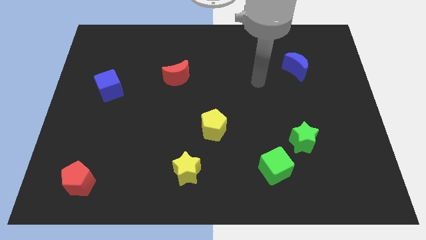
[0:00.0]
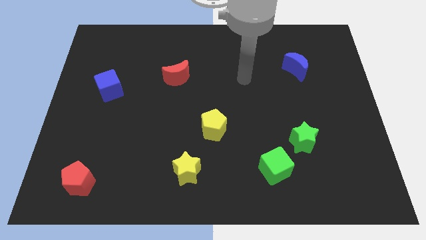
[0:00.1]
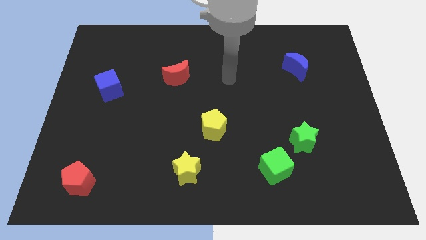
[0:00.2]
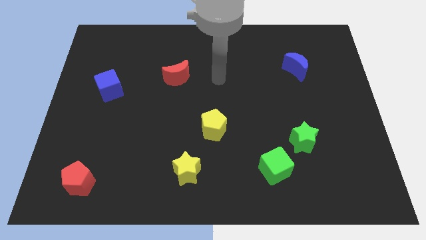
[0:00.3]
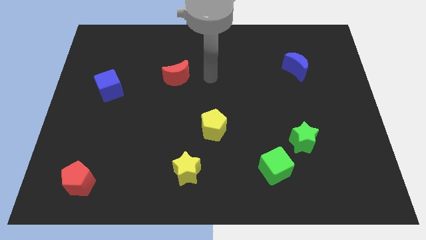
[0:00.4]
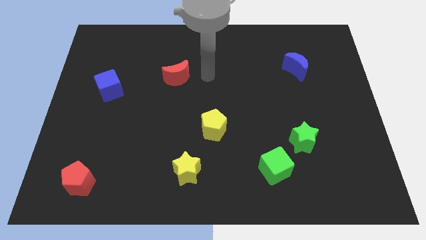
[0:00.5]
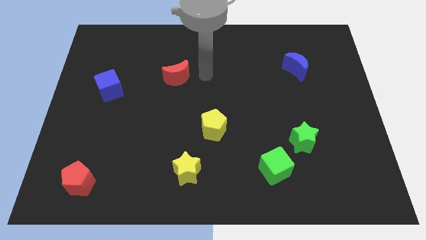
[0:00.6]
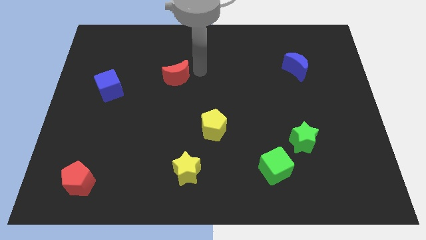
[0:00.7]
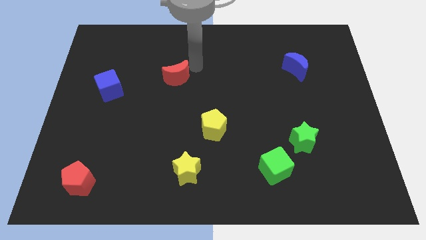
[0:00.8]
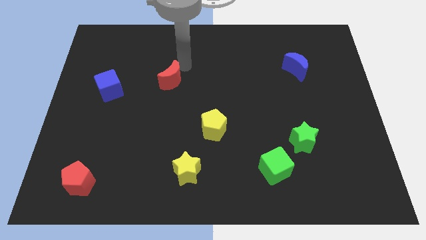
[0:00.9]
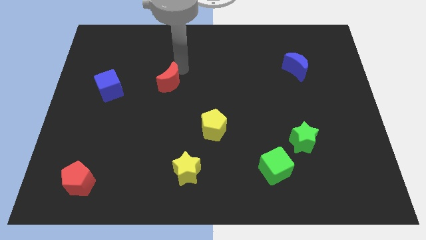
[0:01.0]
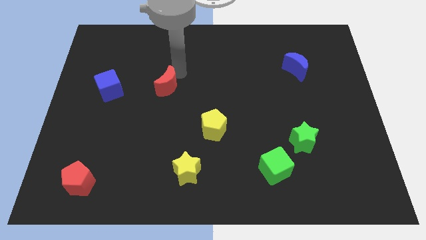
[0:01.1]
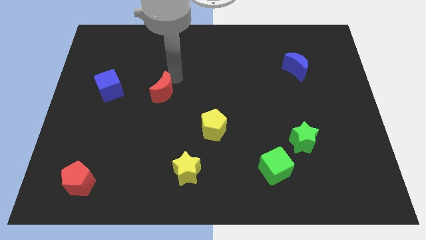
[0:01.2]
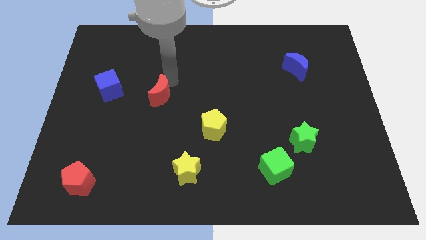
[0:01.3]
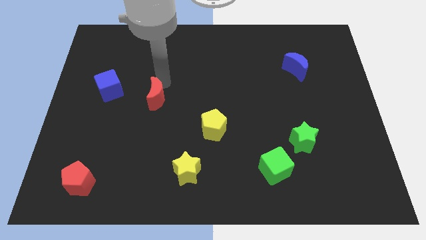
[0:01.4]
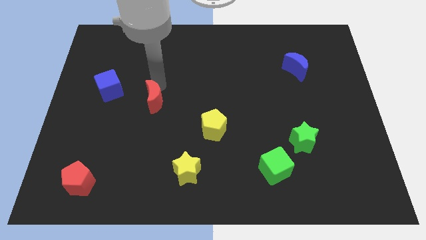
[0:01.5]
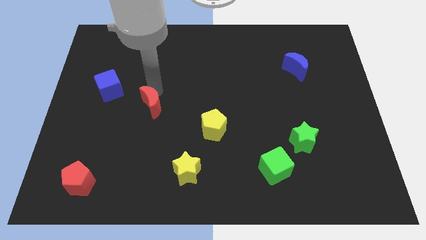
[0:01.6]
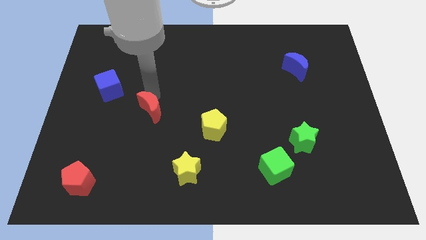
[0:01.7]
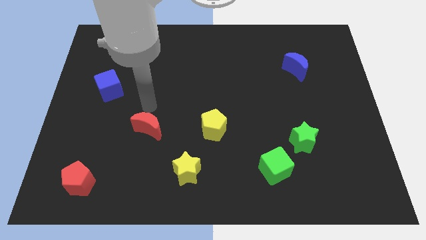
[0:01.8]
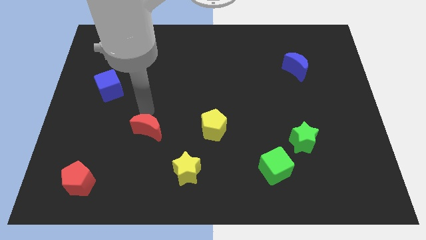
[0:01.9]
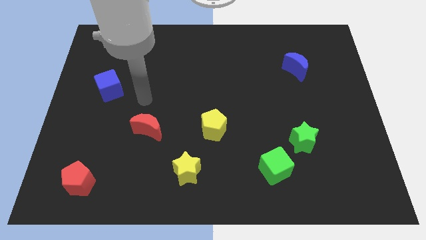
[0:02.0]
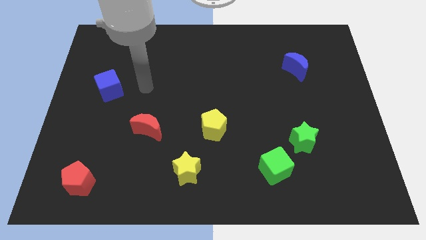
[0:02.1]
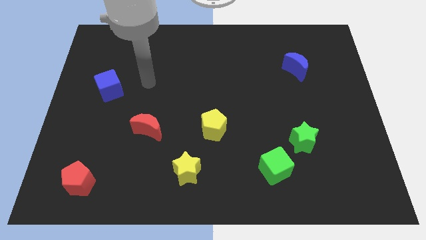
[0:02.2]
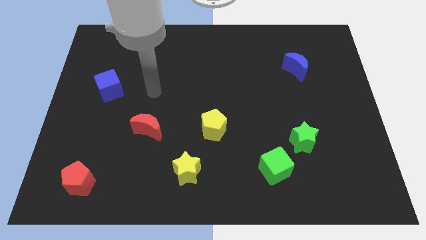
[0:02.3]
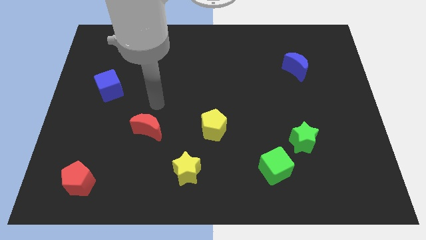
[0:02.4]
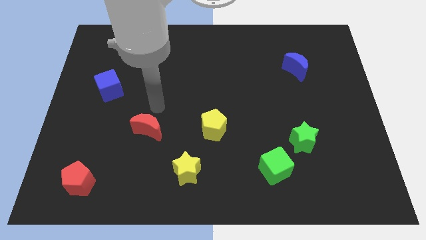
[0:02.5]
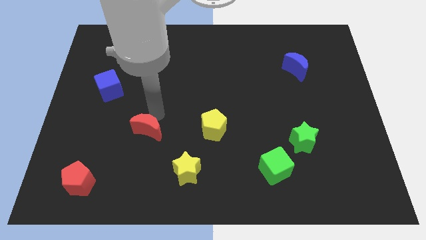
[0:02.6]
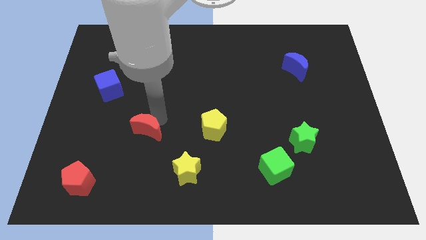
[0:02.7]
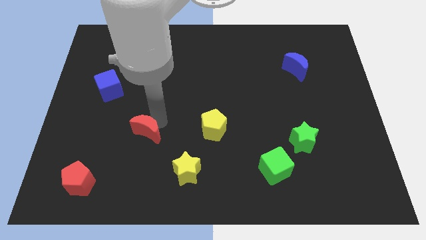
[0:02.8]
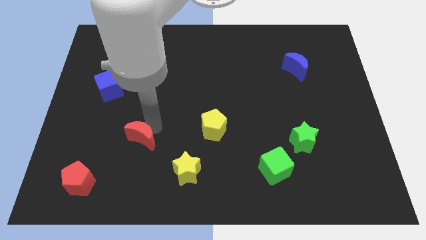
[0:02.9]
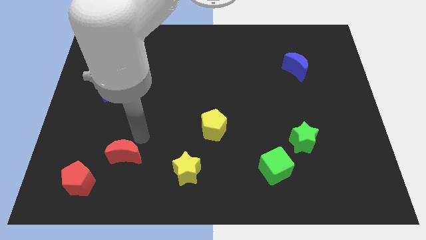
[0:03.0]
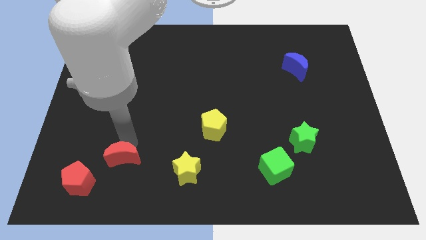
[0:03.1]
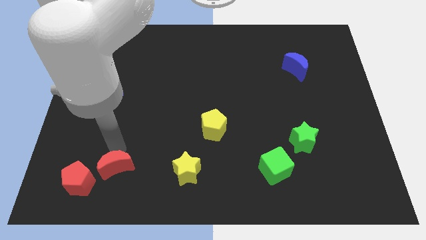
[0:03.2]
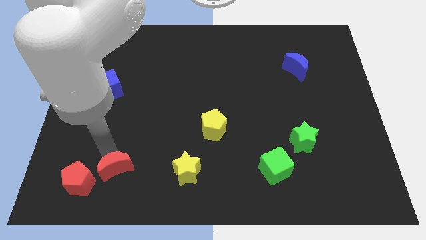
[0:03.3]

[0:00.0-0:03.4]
place the red crescent to the right of the red pentagon

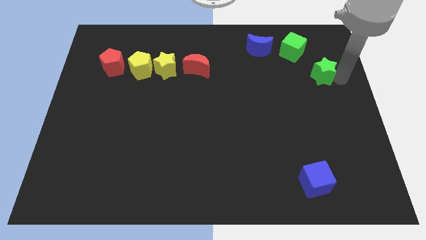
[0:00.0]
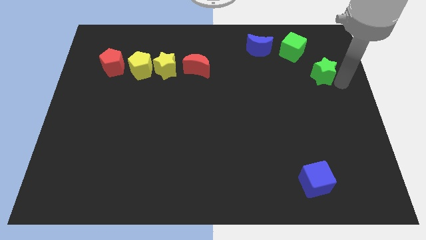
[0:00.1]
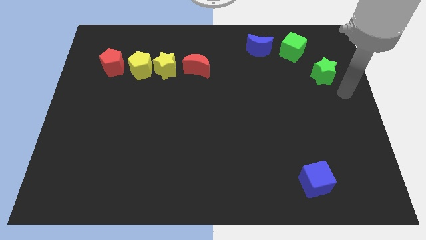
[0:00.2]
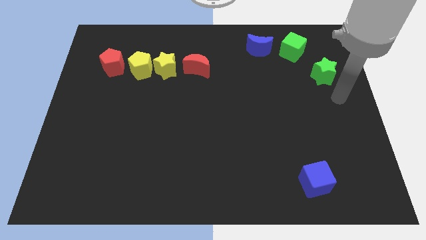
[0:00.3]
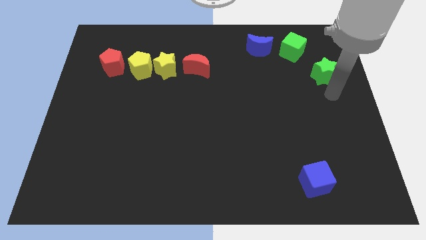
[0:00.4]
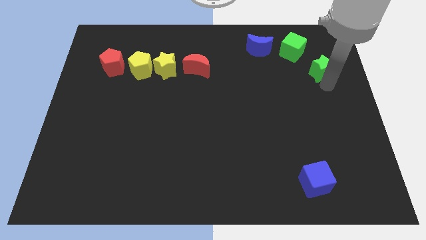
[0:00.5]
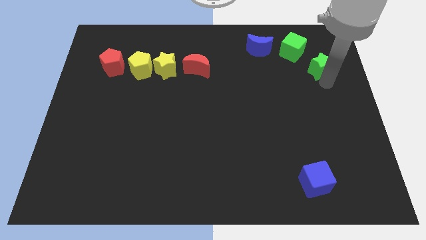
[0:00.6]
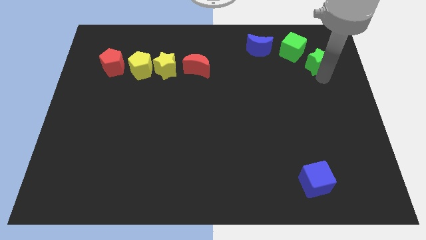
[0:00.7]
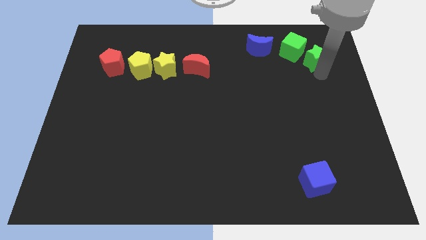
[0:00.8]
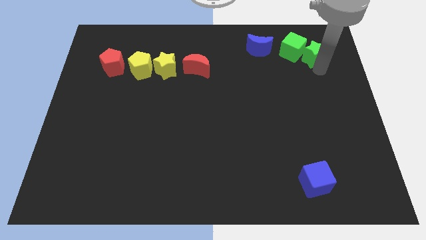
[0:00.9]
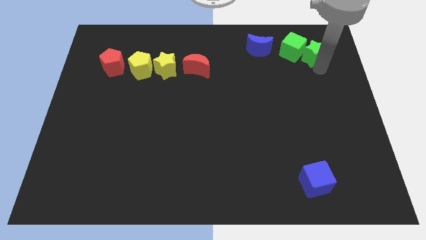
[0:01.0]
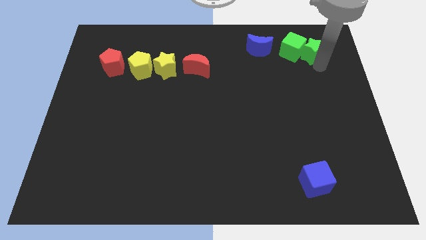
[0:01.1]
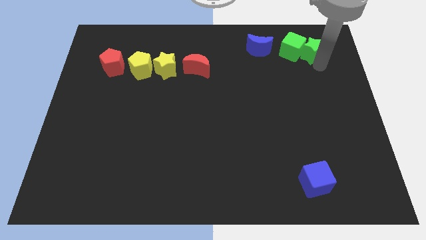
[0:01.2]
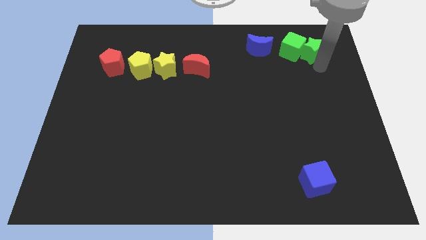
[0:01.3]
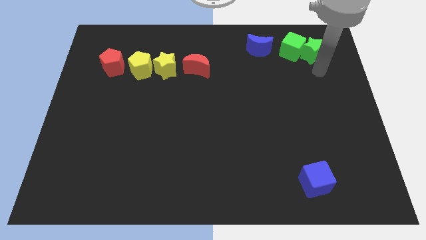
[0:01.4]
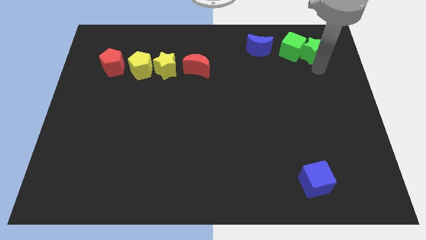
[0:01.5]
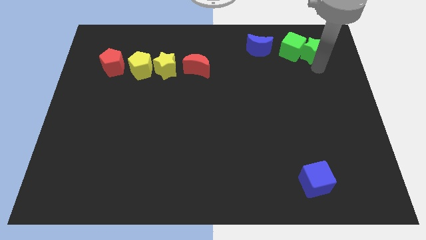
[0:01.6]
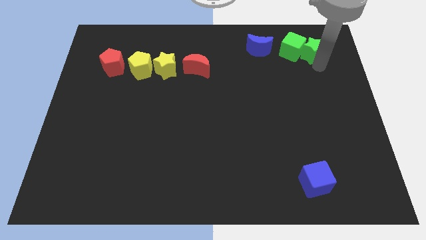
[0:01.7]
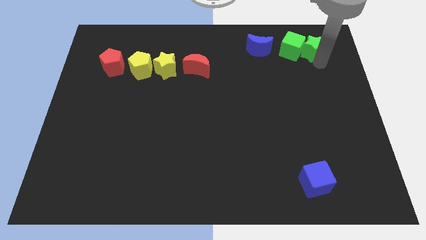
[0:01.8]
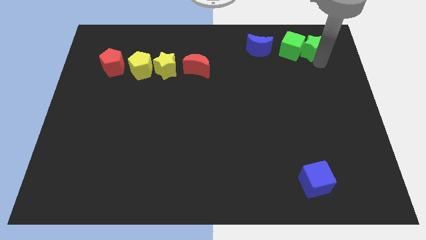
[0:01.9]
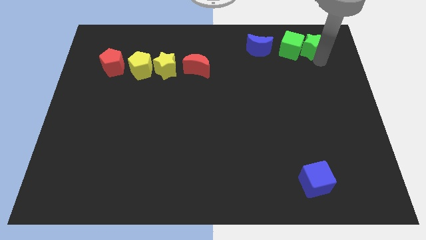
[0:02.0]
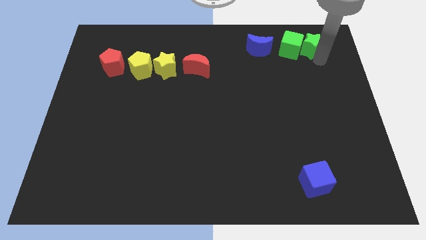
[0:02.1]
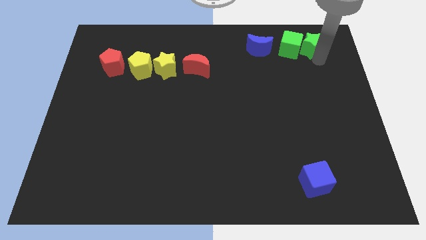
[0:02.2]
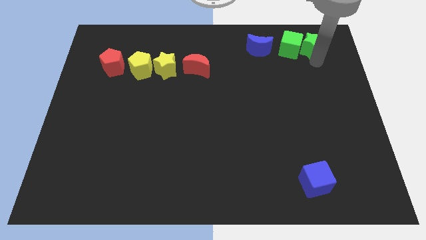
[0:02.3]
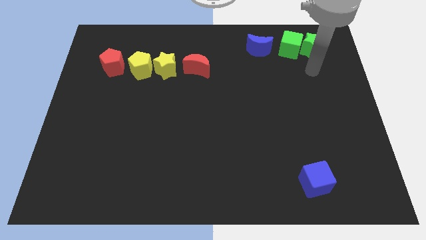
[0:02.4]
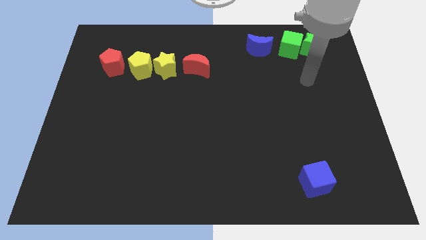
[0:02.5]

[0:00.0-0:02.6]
push the green star into green square

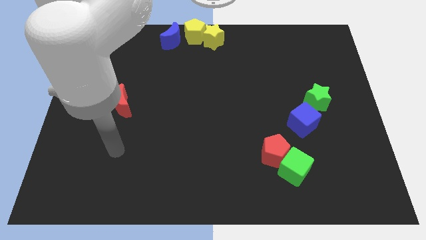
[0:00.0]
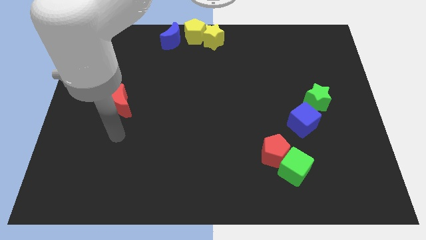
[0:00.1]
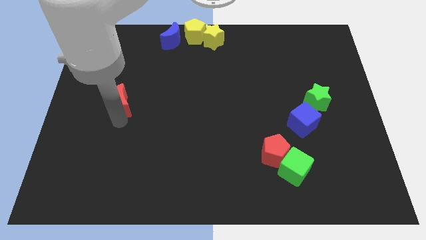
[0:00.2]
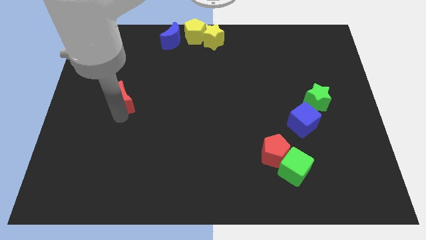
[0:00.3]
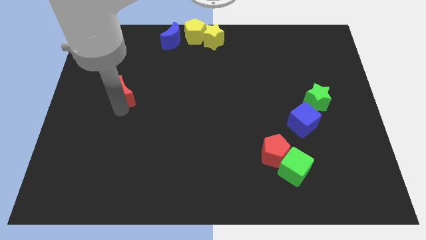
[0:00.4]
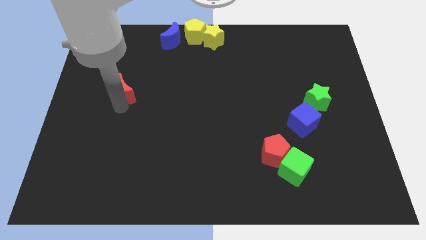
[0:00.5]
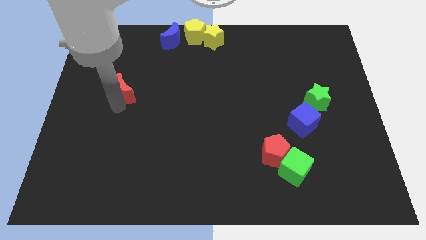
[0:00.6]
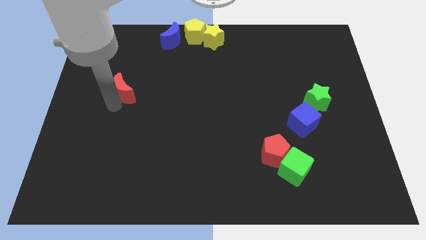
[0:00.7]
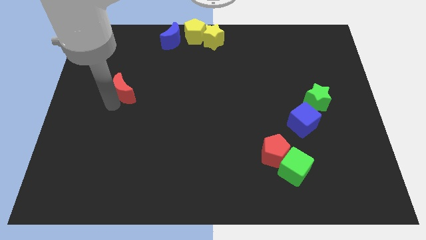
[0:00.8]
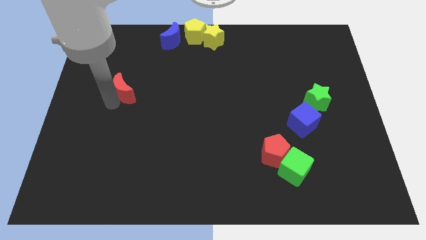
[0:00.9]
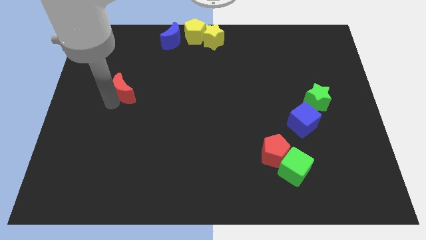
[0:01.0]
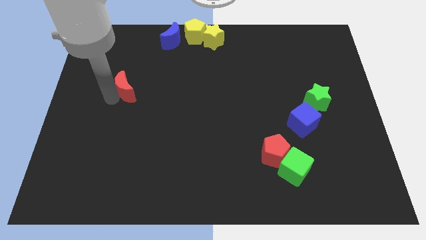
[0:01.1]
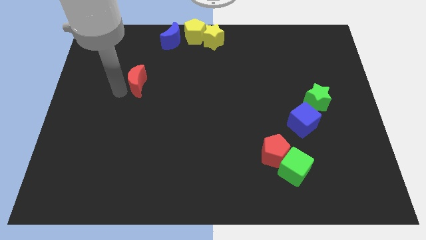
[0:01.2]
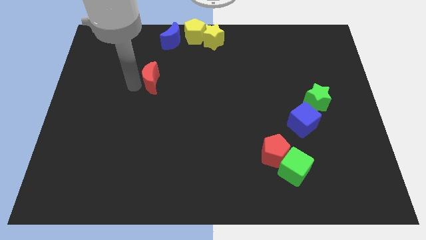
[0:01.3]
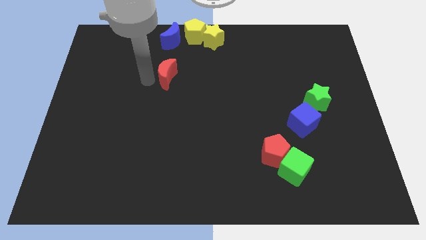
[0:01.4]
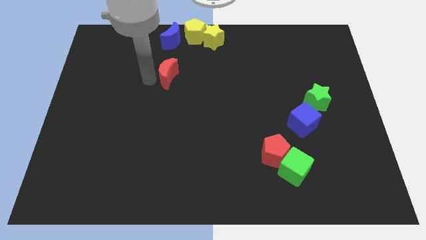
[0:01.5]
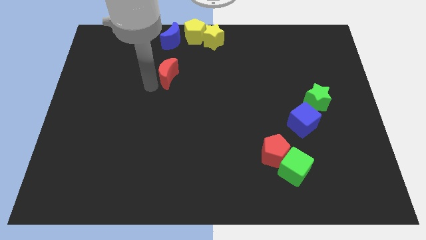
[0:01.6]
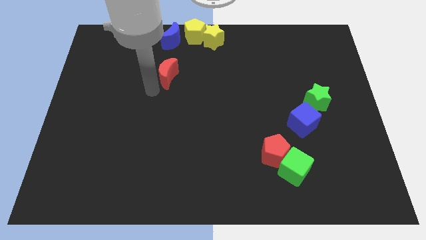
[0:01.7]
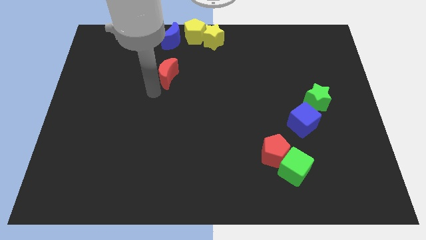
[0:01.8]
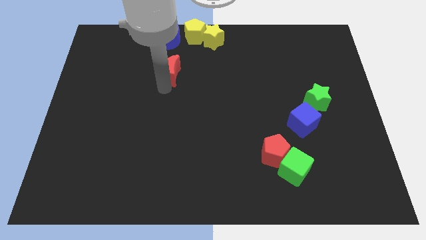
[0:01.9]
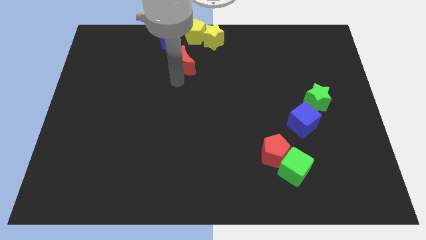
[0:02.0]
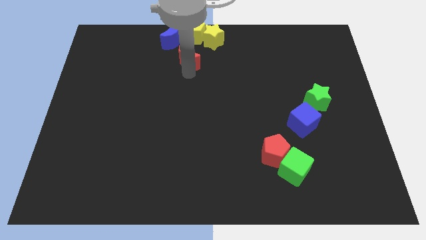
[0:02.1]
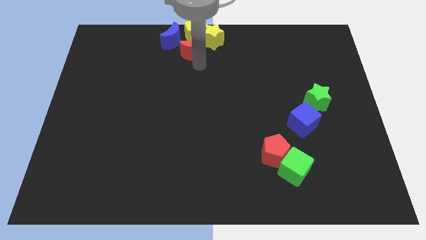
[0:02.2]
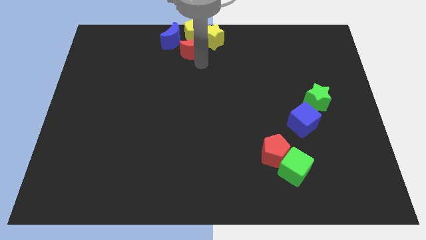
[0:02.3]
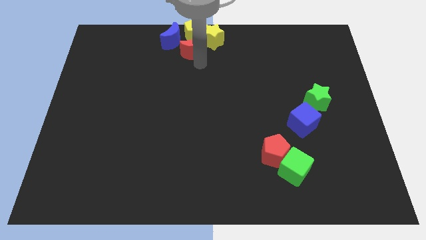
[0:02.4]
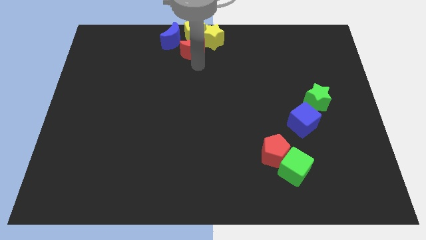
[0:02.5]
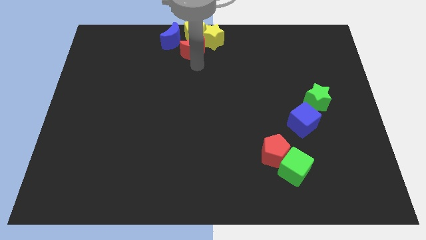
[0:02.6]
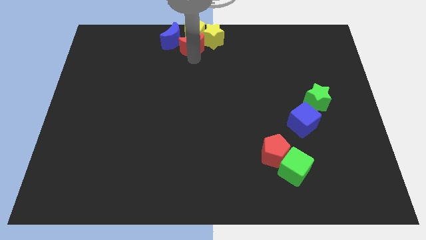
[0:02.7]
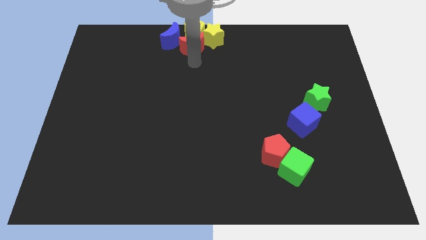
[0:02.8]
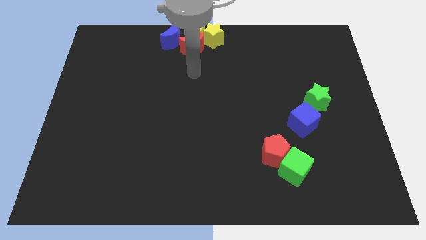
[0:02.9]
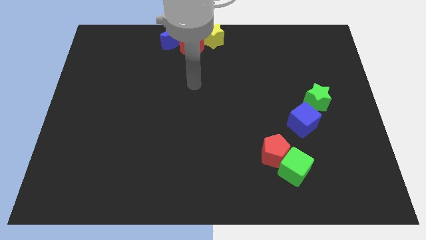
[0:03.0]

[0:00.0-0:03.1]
slide red moon into yellow pentagon

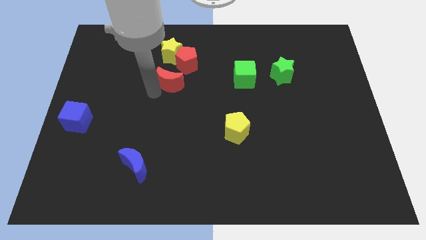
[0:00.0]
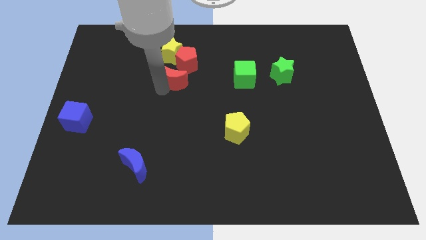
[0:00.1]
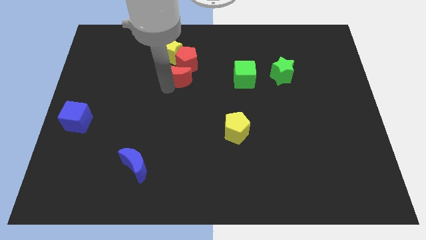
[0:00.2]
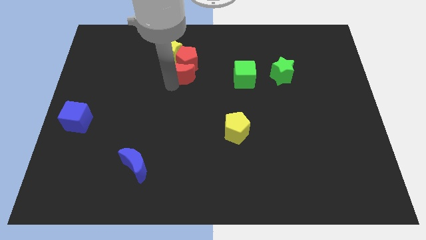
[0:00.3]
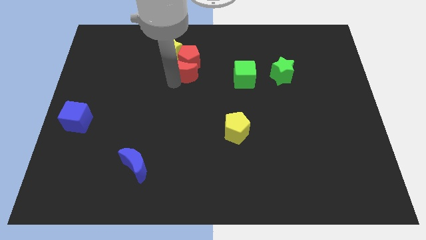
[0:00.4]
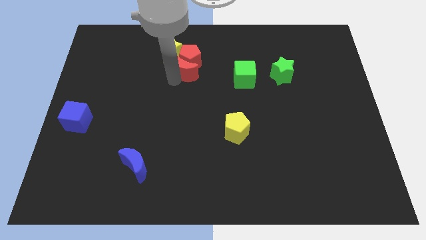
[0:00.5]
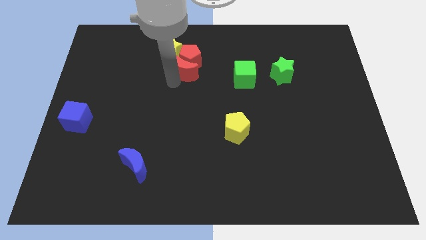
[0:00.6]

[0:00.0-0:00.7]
place the red crescent below the red pentagon
